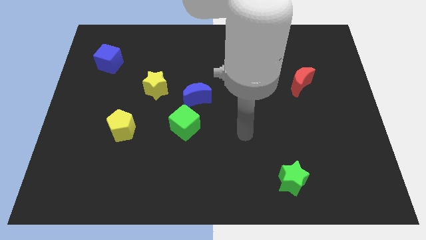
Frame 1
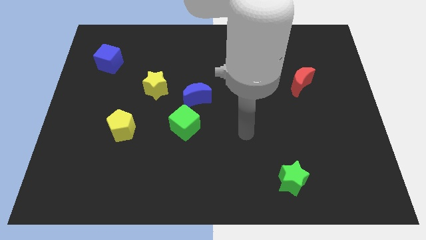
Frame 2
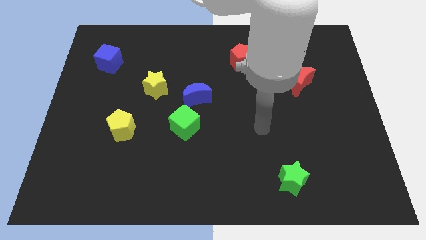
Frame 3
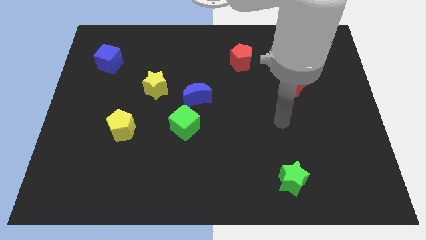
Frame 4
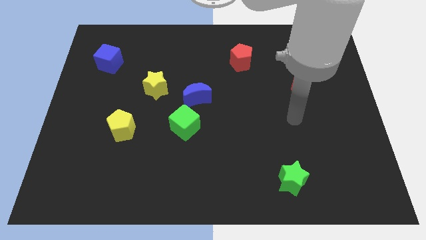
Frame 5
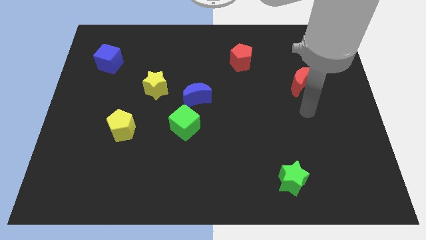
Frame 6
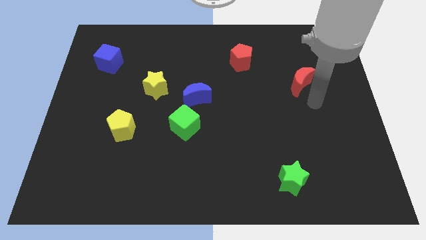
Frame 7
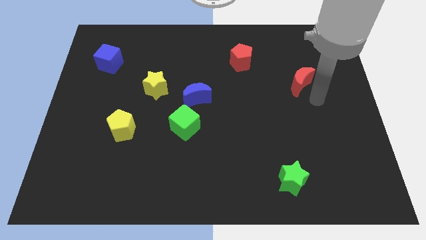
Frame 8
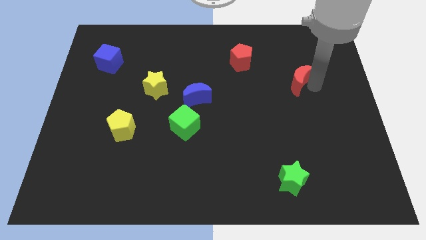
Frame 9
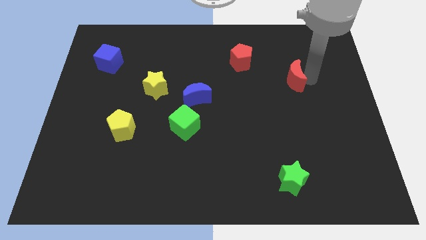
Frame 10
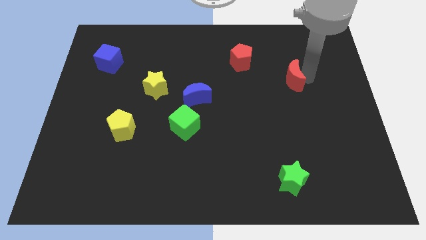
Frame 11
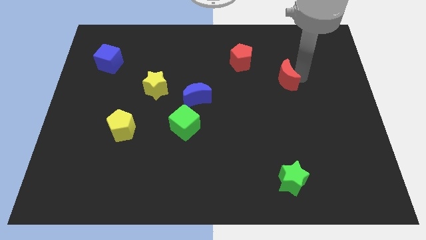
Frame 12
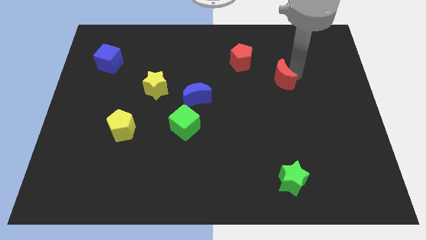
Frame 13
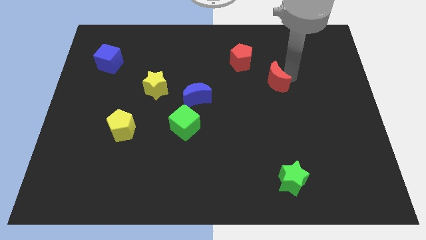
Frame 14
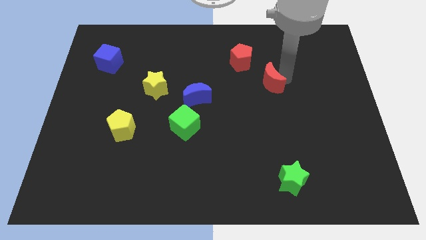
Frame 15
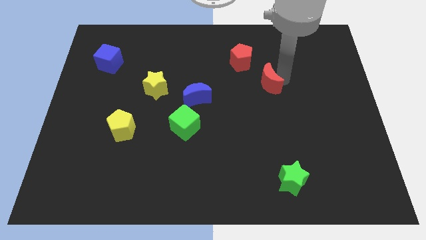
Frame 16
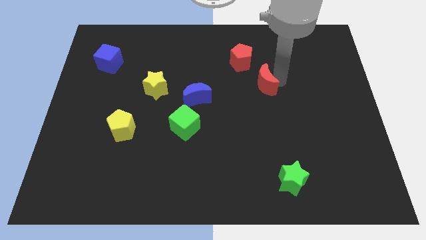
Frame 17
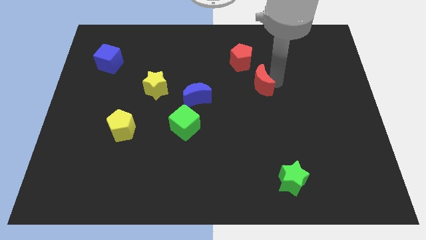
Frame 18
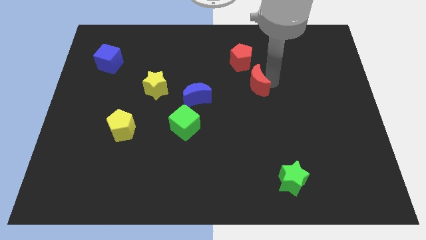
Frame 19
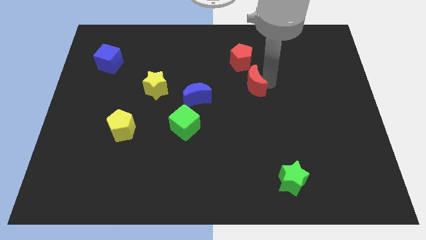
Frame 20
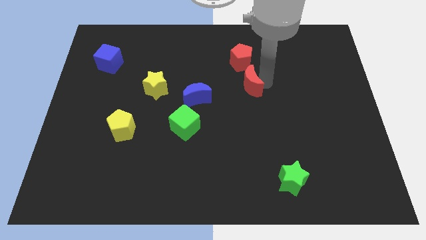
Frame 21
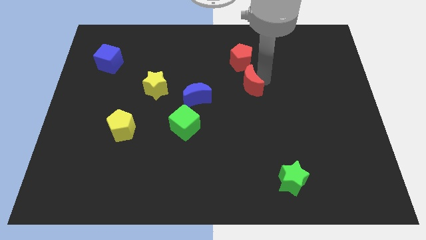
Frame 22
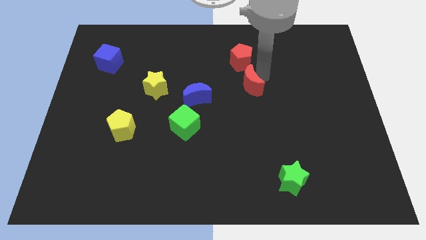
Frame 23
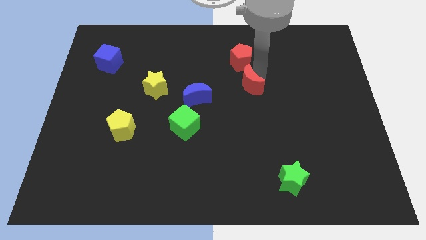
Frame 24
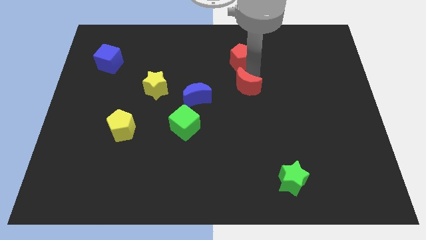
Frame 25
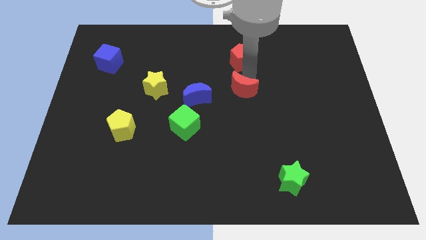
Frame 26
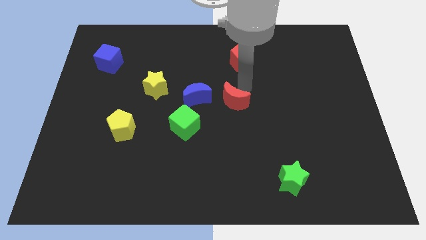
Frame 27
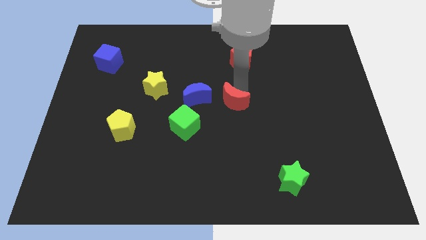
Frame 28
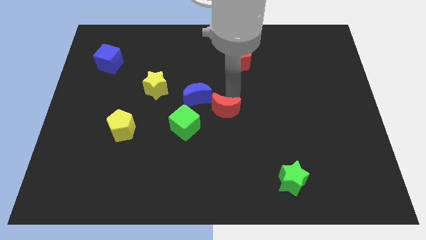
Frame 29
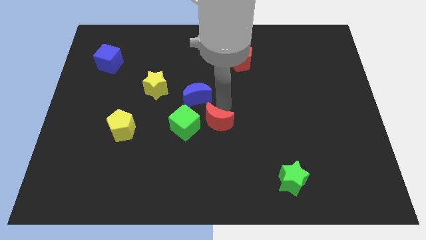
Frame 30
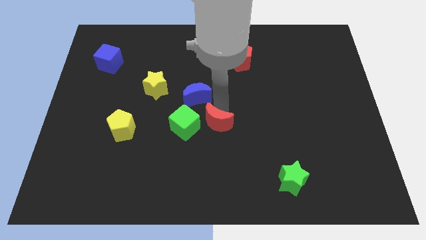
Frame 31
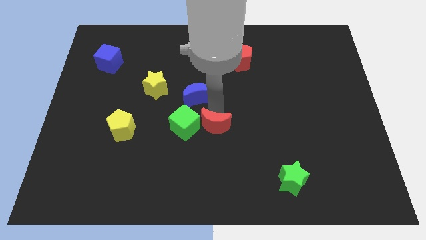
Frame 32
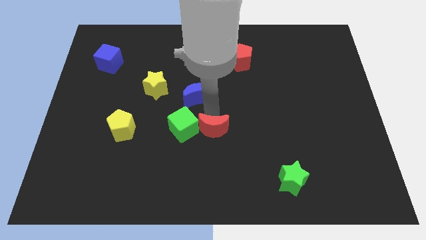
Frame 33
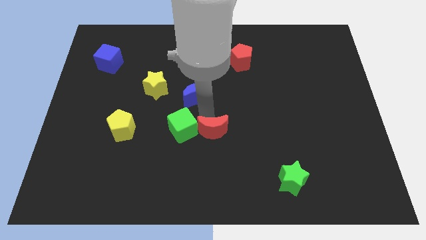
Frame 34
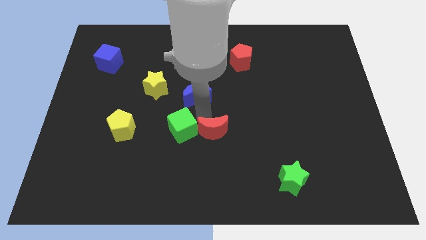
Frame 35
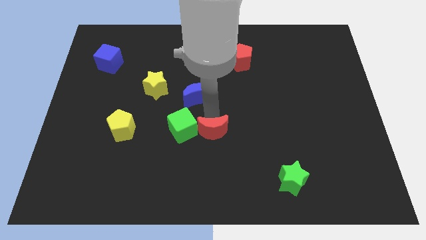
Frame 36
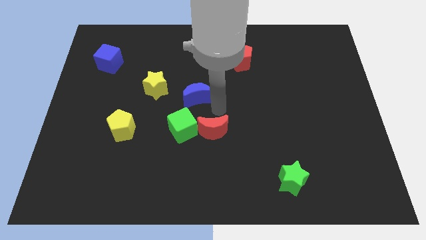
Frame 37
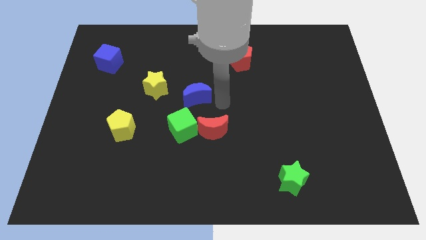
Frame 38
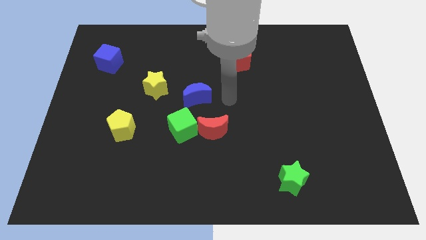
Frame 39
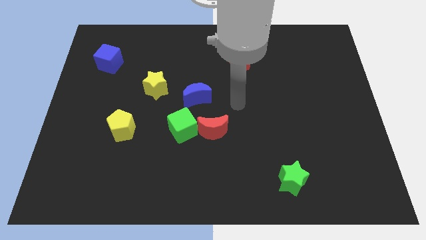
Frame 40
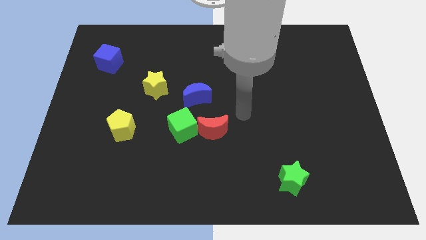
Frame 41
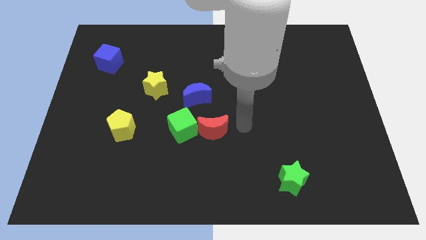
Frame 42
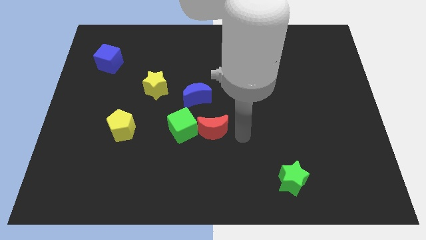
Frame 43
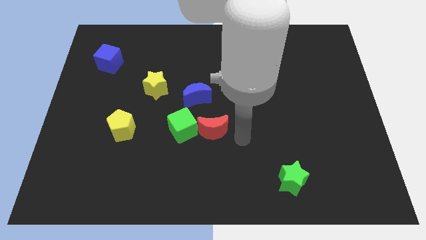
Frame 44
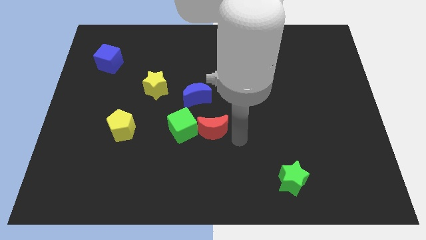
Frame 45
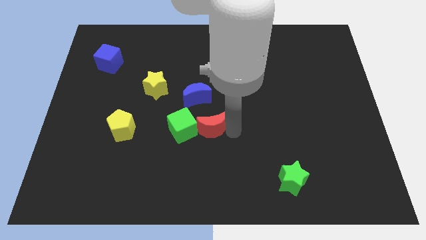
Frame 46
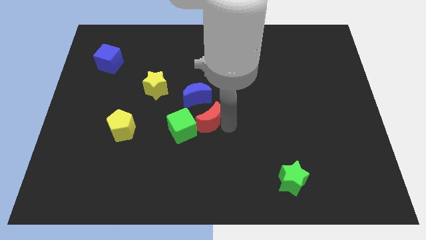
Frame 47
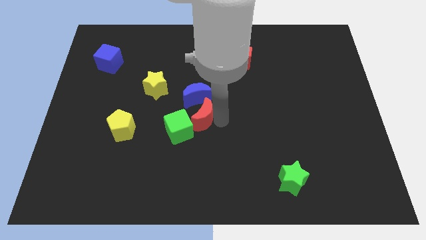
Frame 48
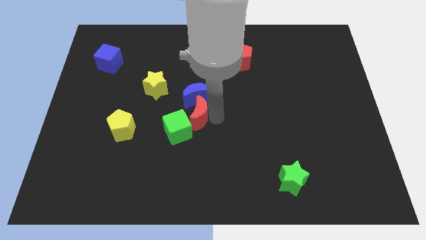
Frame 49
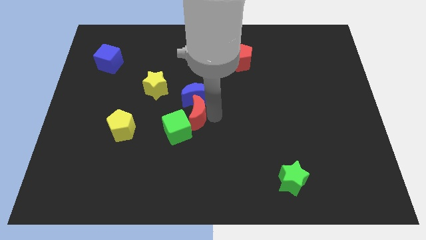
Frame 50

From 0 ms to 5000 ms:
slide the red moon close to the green cube

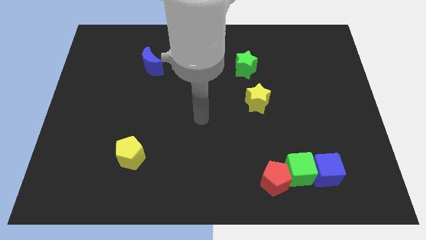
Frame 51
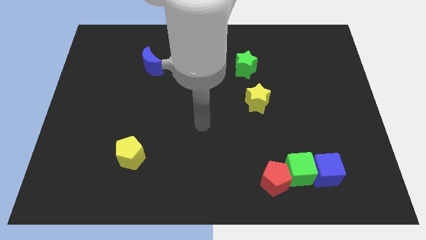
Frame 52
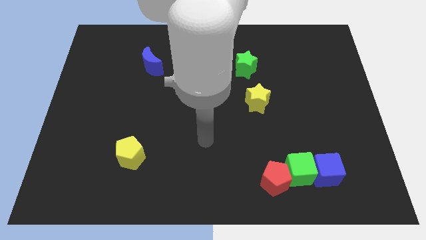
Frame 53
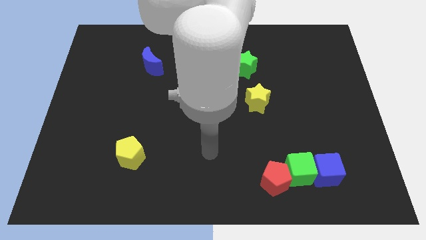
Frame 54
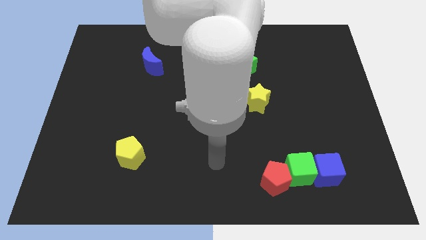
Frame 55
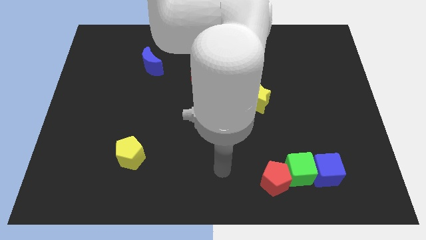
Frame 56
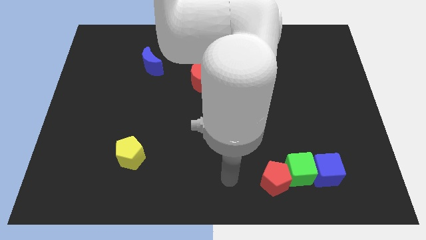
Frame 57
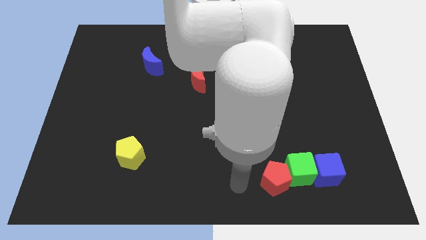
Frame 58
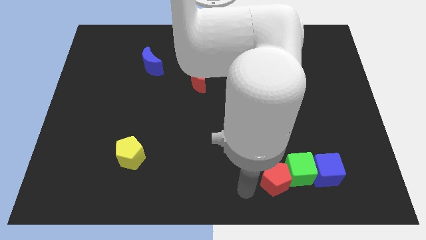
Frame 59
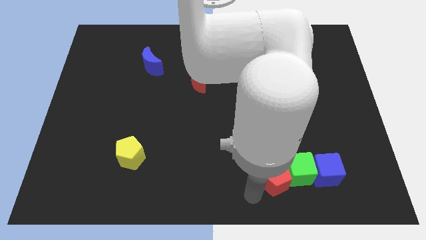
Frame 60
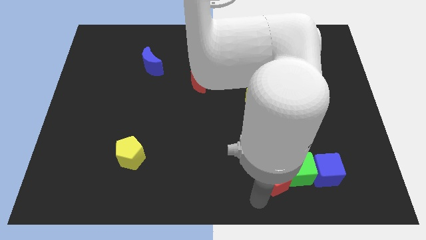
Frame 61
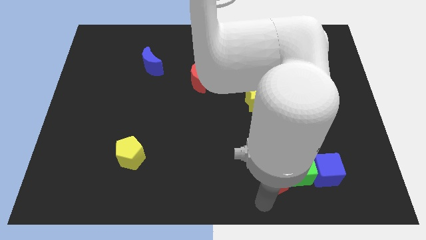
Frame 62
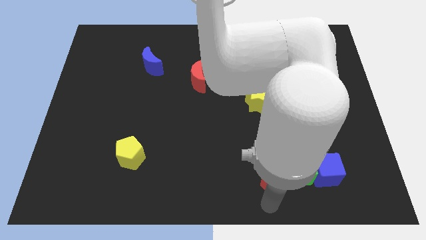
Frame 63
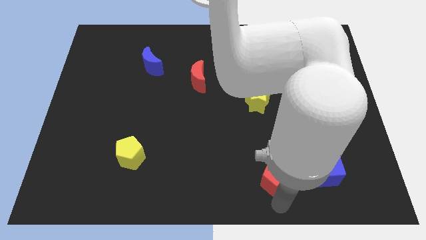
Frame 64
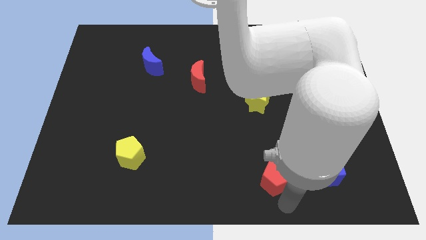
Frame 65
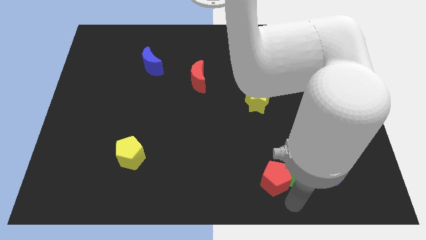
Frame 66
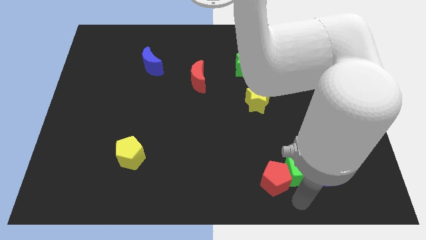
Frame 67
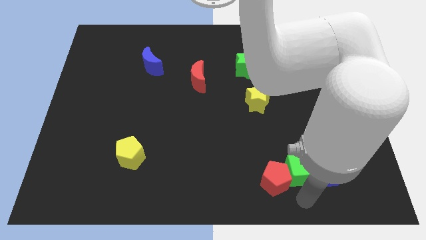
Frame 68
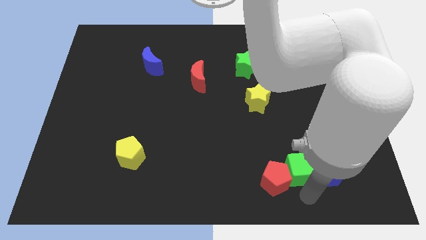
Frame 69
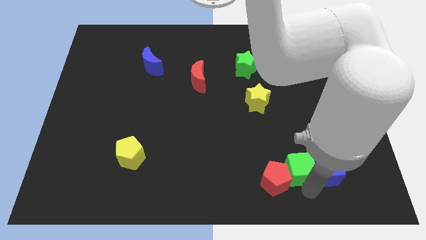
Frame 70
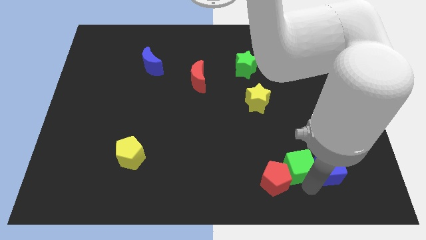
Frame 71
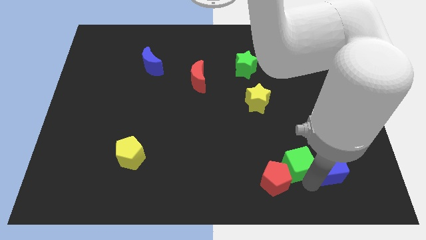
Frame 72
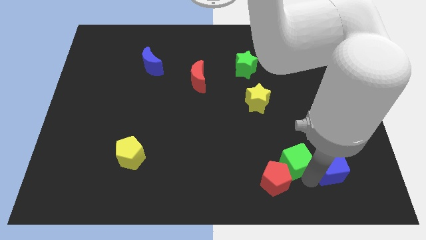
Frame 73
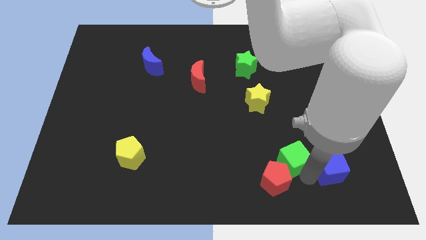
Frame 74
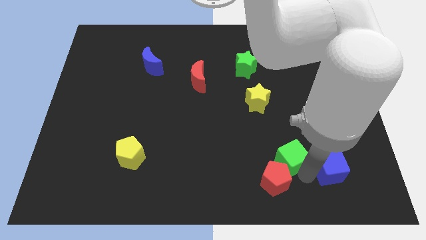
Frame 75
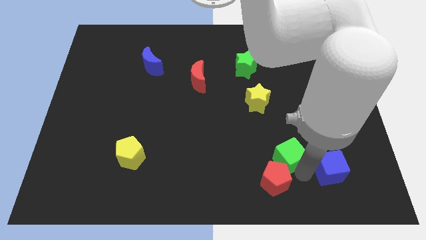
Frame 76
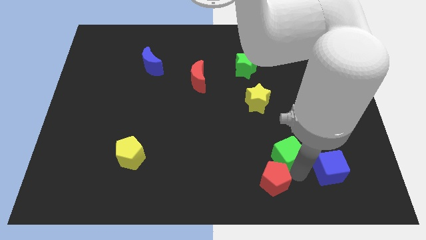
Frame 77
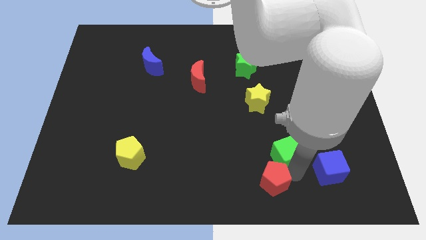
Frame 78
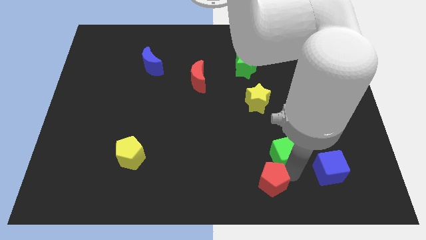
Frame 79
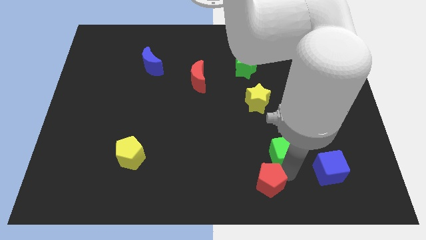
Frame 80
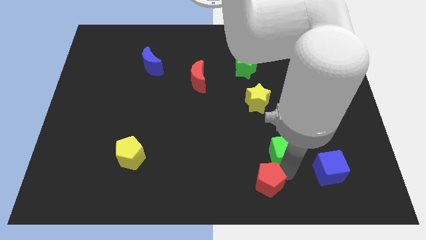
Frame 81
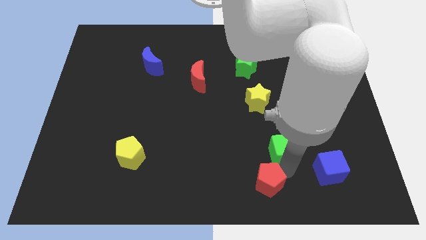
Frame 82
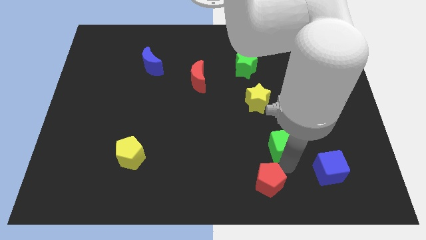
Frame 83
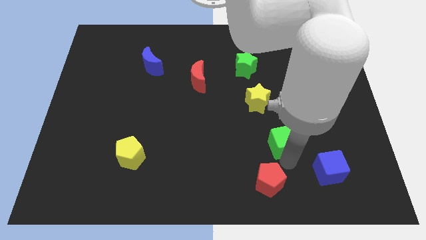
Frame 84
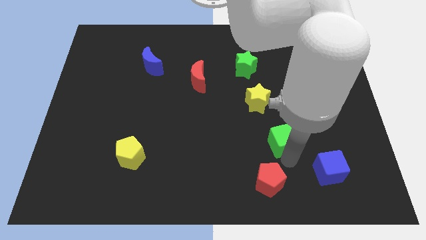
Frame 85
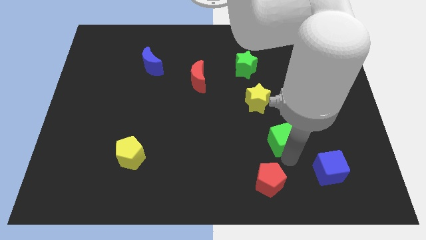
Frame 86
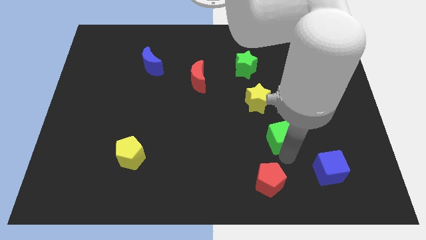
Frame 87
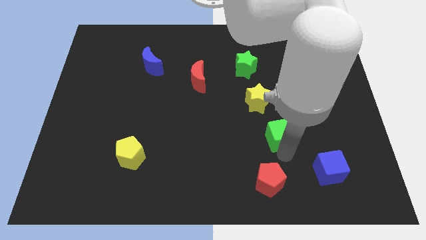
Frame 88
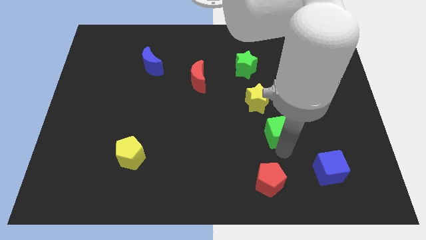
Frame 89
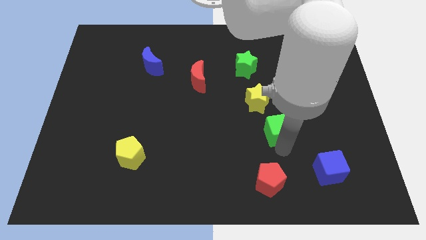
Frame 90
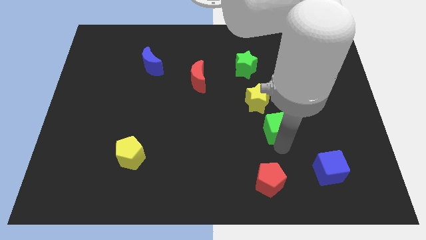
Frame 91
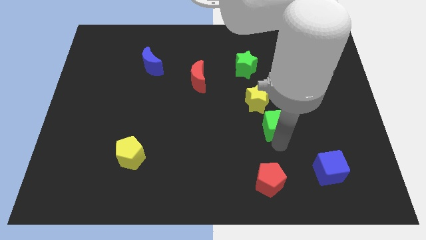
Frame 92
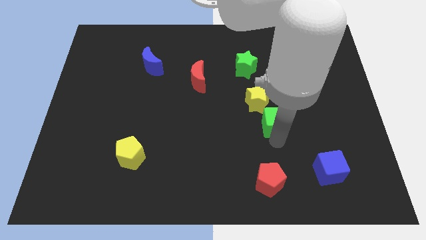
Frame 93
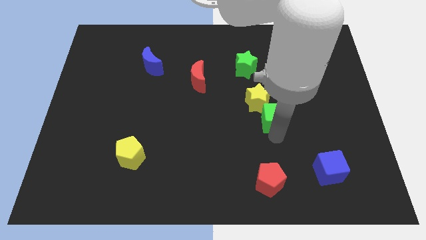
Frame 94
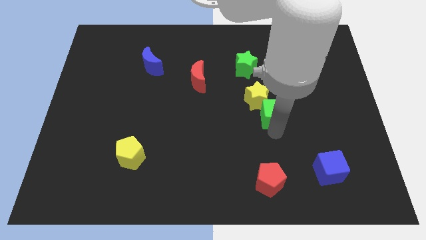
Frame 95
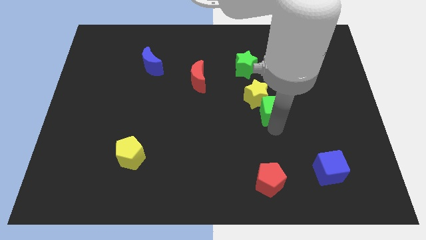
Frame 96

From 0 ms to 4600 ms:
push the green cube close to the yellow star
